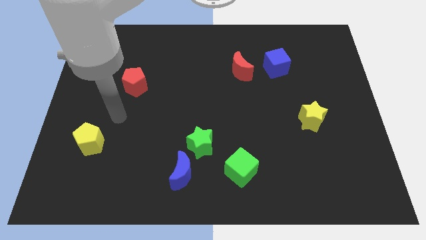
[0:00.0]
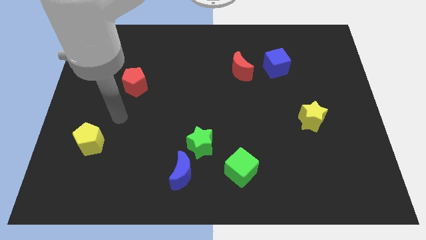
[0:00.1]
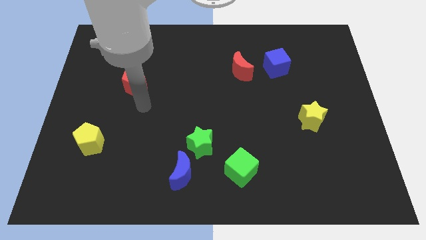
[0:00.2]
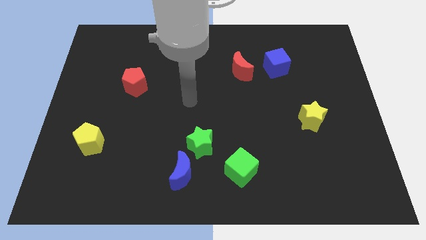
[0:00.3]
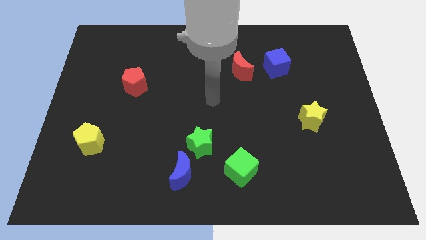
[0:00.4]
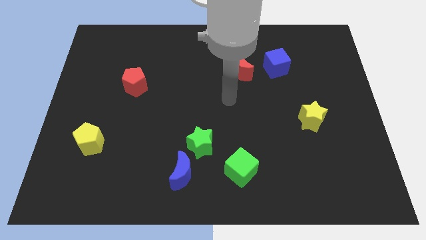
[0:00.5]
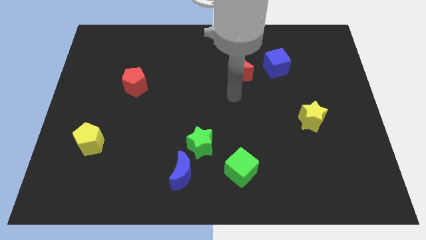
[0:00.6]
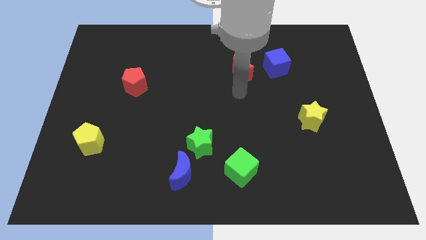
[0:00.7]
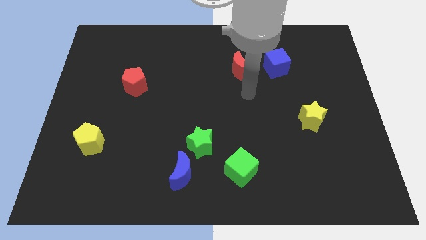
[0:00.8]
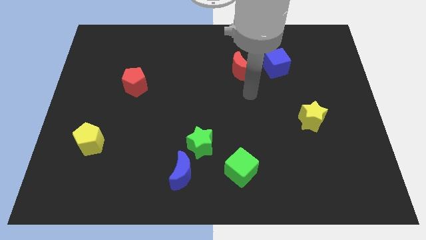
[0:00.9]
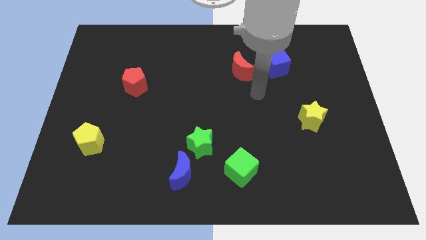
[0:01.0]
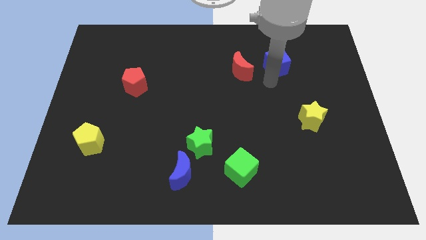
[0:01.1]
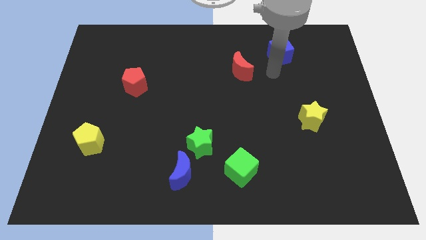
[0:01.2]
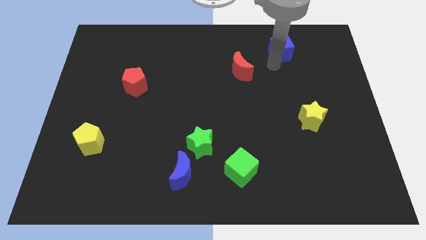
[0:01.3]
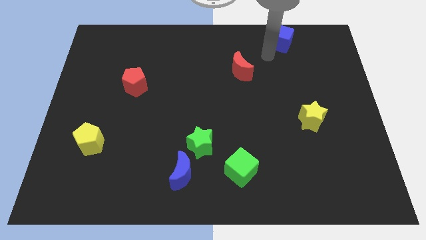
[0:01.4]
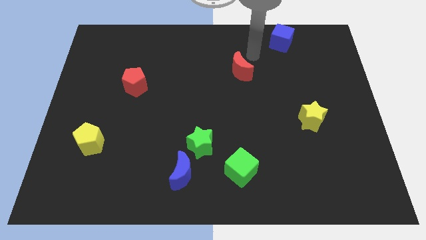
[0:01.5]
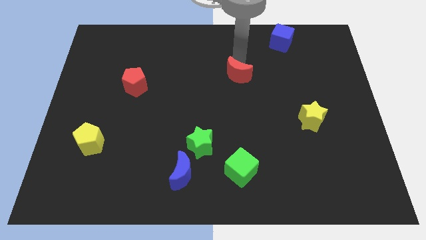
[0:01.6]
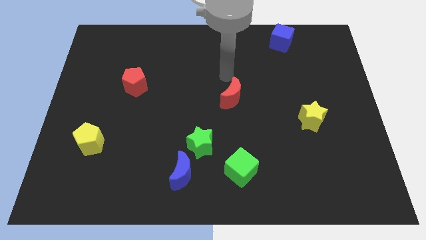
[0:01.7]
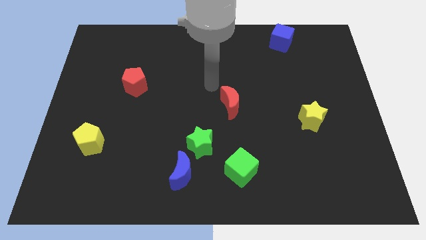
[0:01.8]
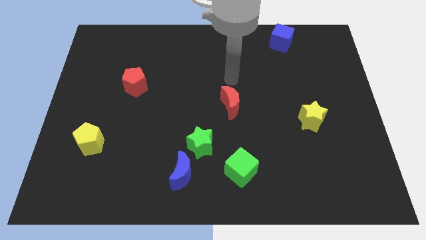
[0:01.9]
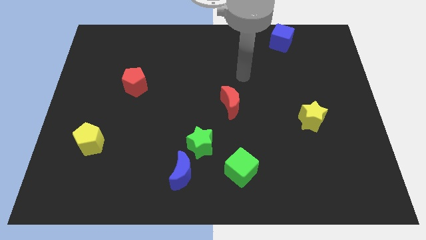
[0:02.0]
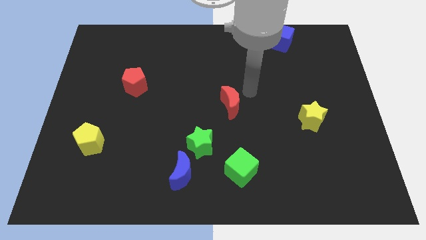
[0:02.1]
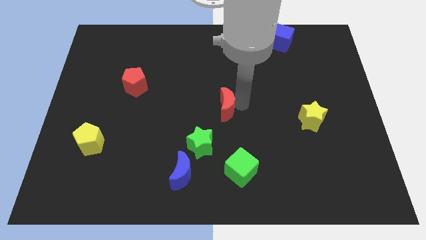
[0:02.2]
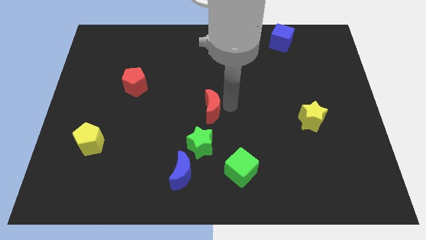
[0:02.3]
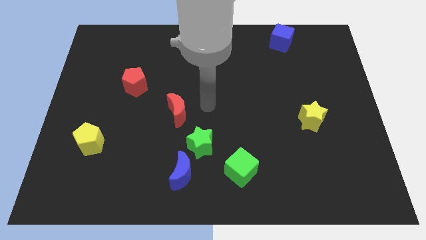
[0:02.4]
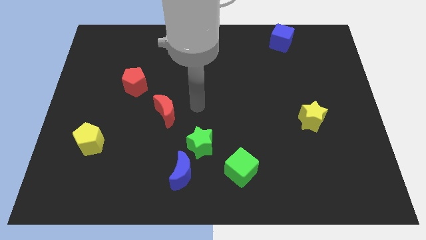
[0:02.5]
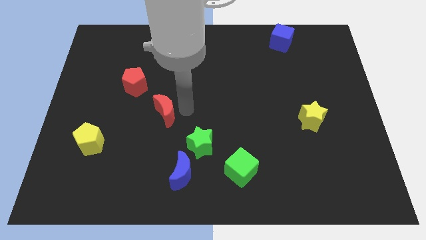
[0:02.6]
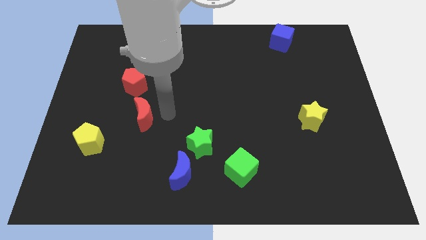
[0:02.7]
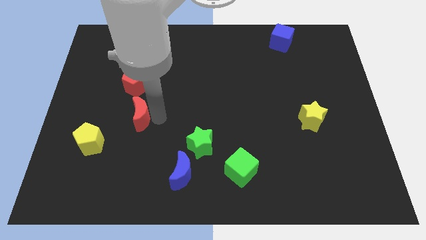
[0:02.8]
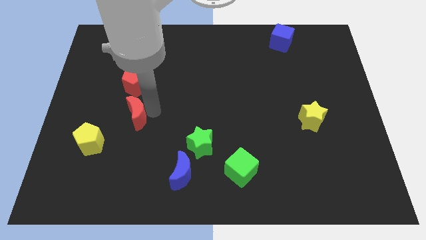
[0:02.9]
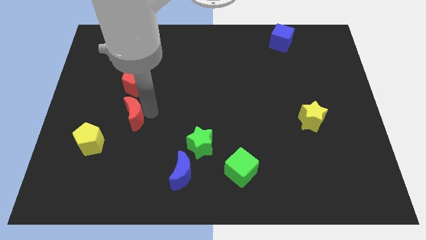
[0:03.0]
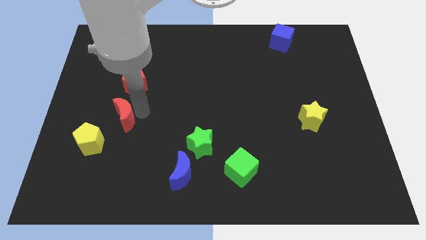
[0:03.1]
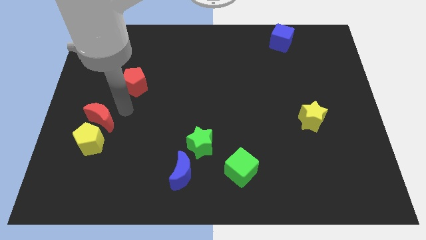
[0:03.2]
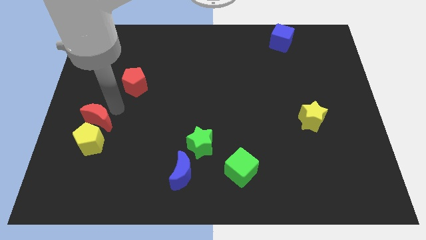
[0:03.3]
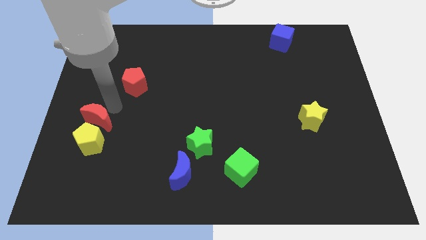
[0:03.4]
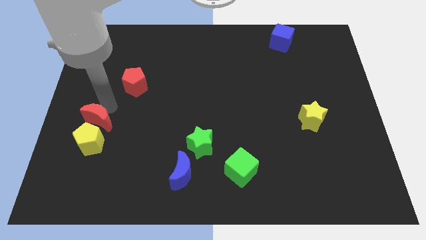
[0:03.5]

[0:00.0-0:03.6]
move the red moon next to the yellow pentagon

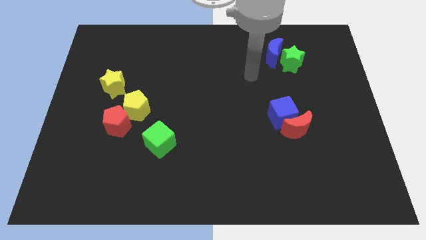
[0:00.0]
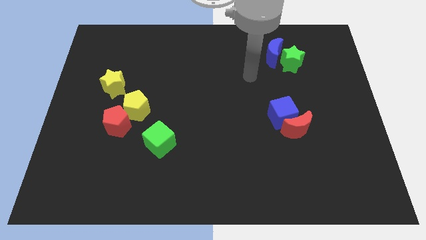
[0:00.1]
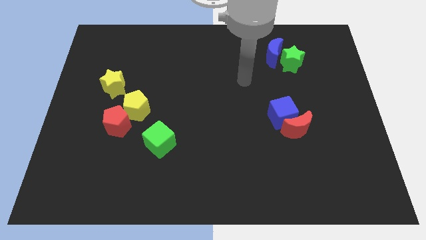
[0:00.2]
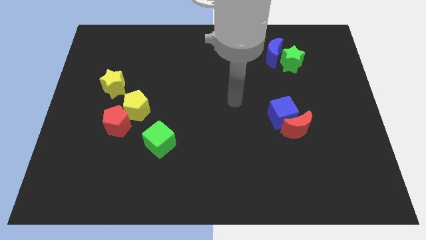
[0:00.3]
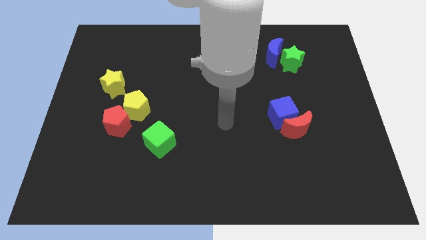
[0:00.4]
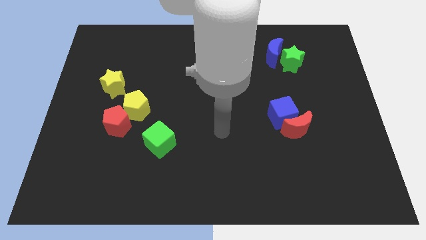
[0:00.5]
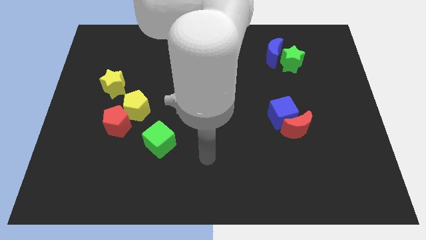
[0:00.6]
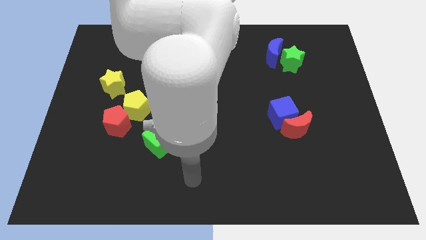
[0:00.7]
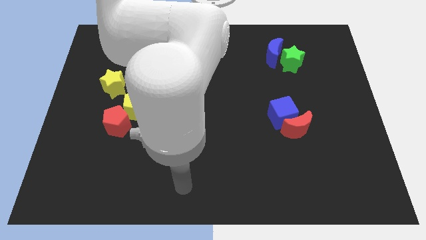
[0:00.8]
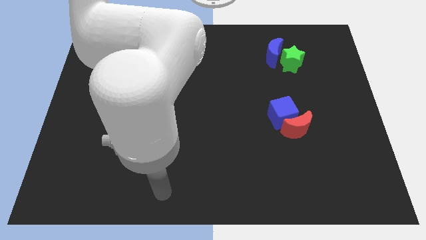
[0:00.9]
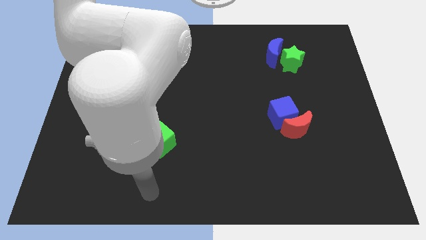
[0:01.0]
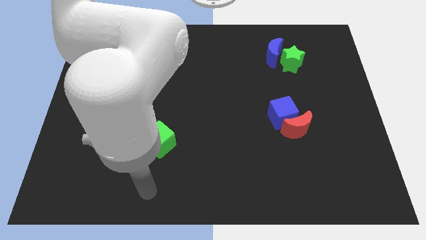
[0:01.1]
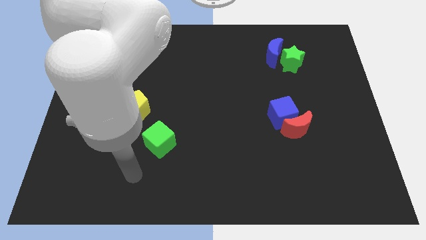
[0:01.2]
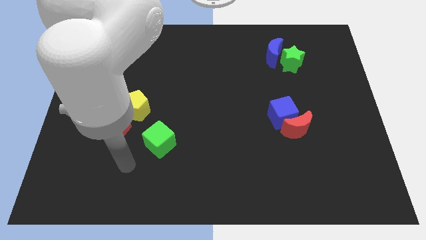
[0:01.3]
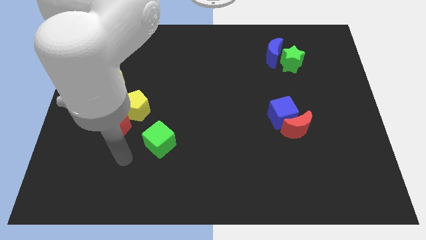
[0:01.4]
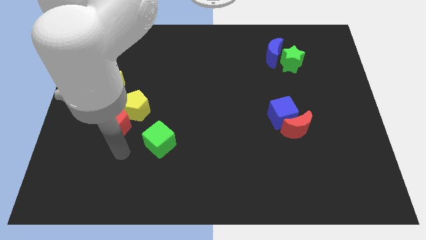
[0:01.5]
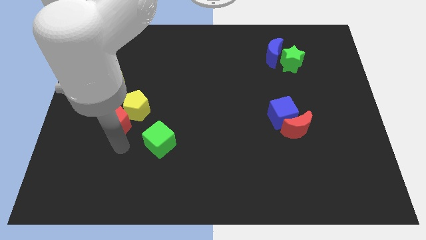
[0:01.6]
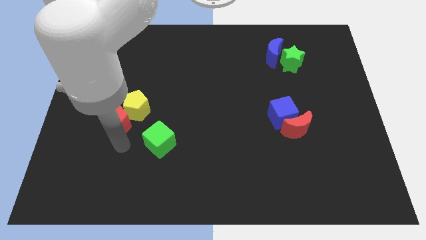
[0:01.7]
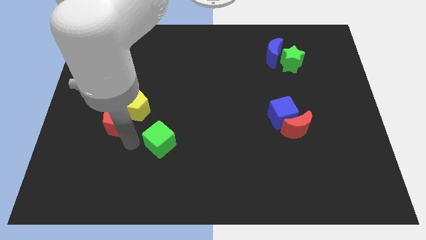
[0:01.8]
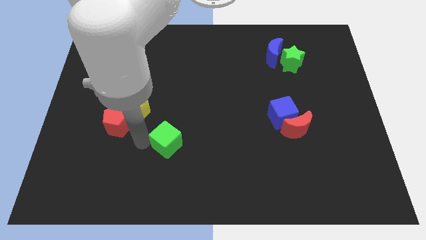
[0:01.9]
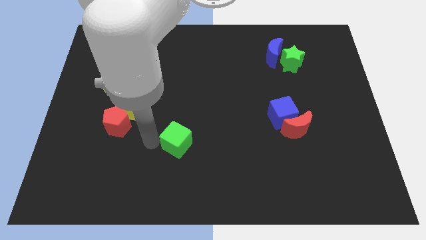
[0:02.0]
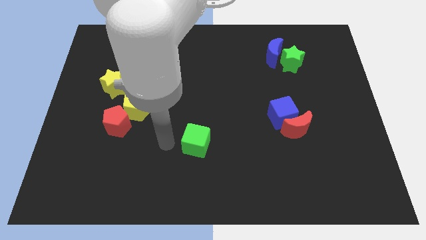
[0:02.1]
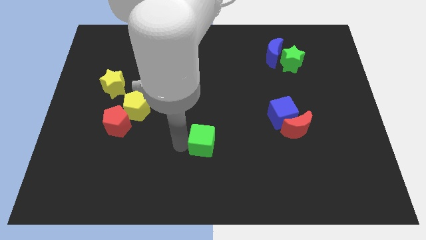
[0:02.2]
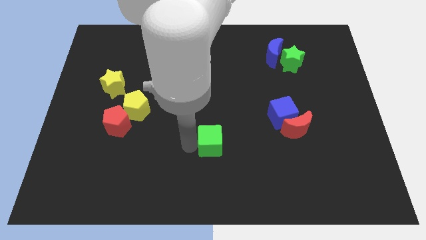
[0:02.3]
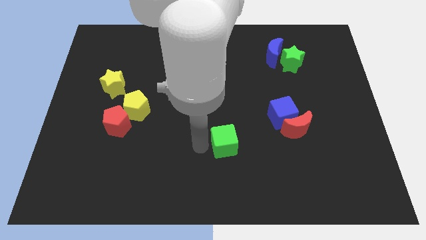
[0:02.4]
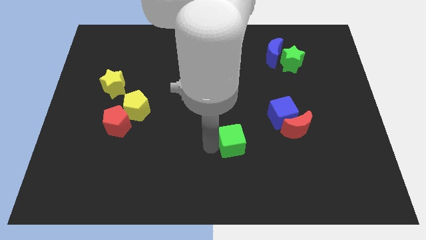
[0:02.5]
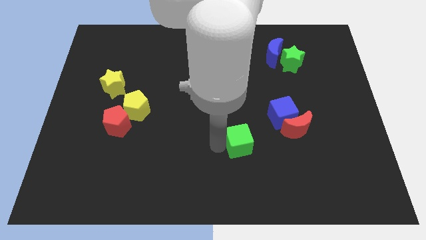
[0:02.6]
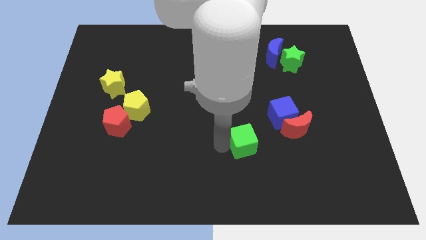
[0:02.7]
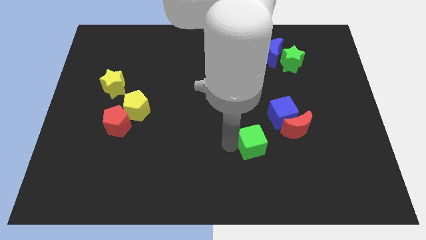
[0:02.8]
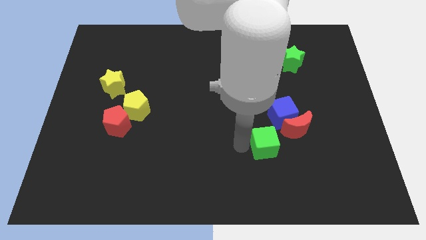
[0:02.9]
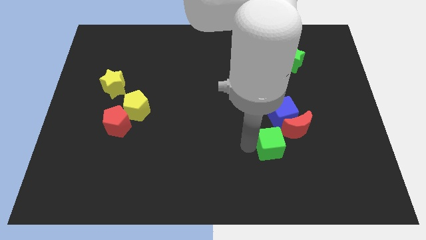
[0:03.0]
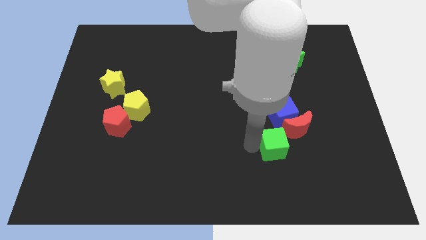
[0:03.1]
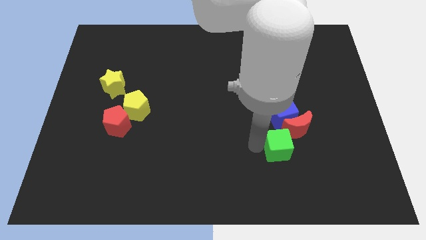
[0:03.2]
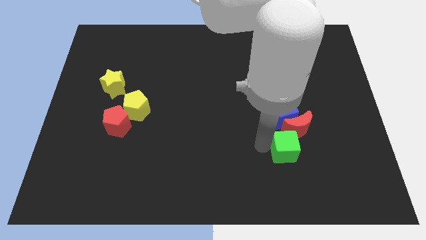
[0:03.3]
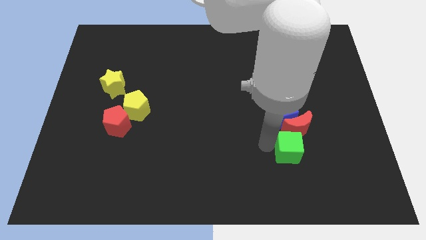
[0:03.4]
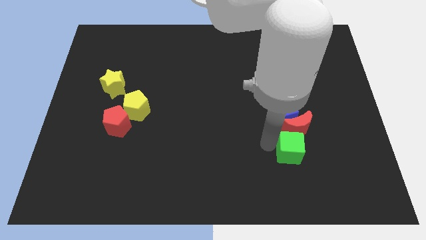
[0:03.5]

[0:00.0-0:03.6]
move the green cube next to the red moon

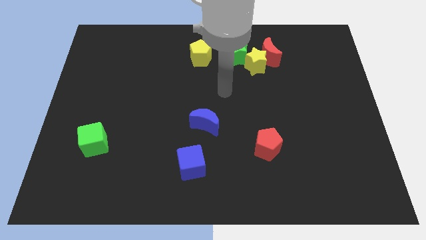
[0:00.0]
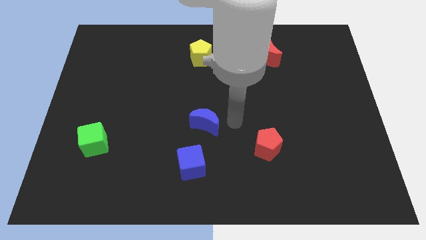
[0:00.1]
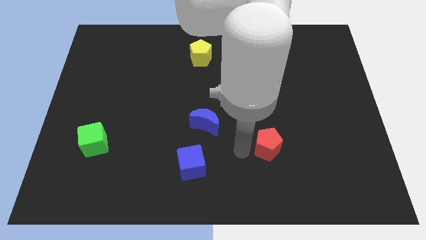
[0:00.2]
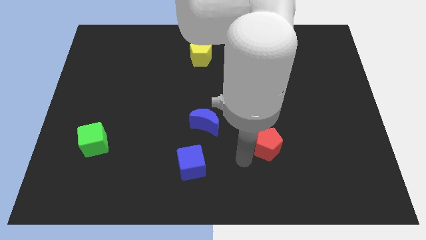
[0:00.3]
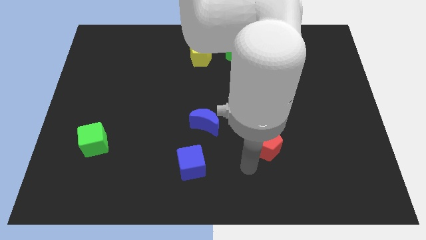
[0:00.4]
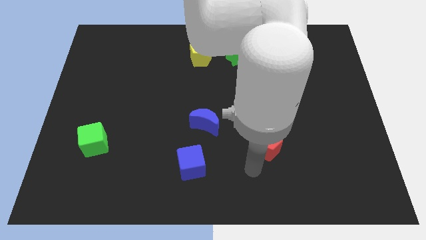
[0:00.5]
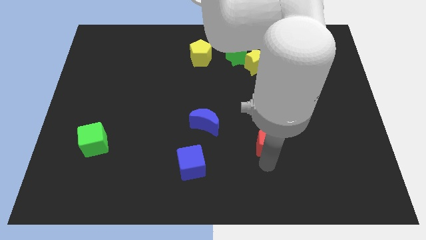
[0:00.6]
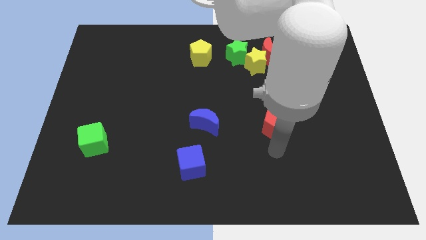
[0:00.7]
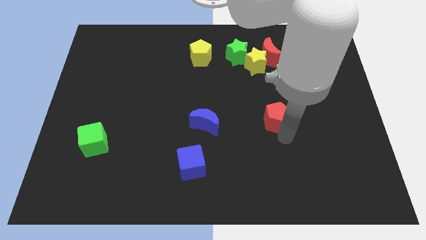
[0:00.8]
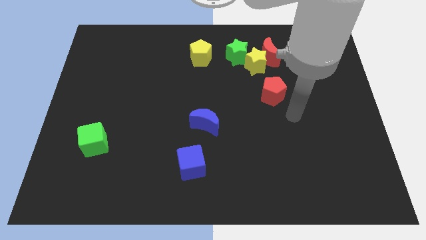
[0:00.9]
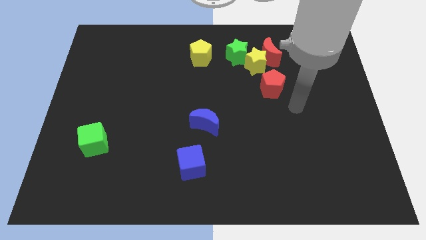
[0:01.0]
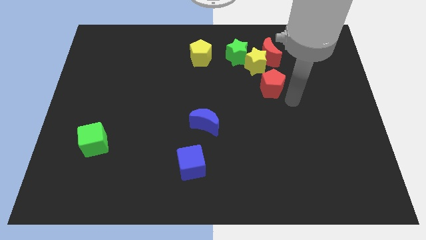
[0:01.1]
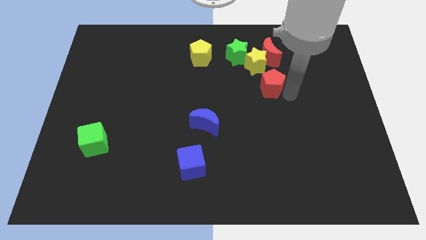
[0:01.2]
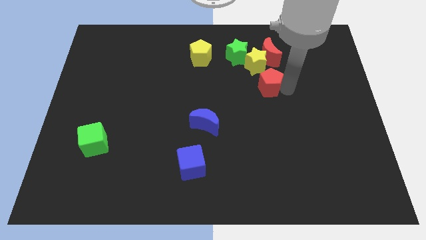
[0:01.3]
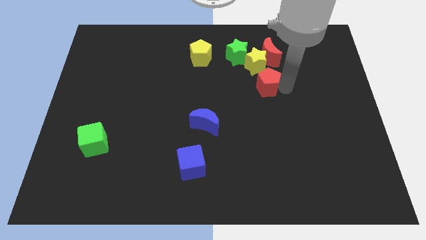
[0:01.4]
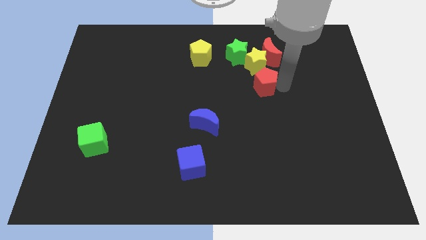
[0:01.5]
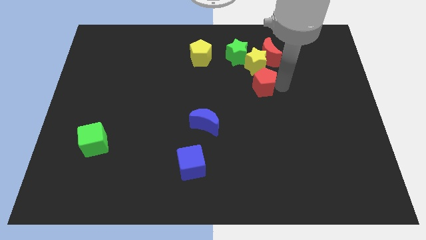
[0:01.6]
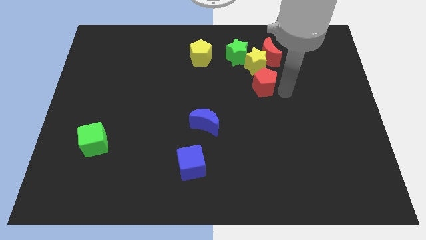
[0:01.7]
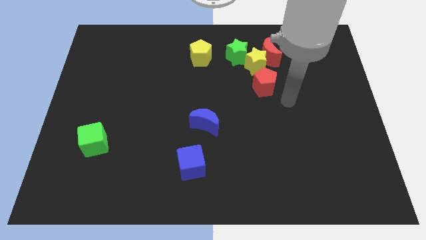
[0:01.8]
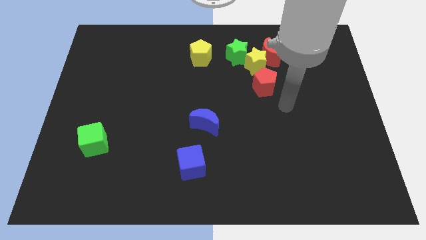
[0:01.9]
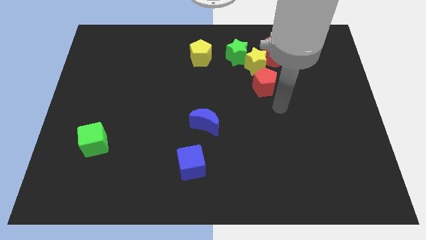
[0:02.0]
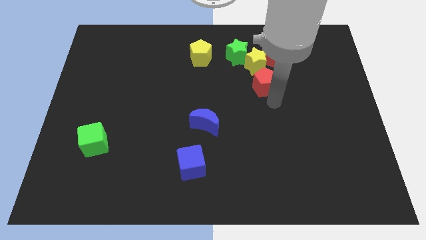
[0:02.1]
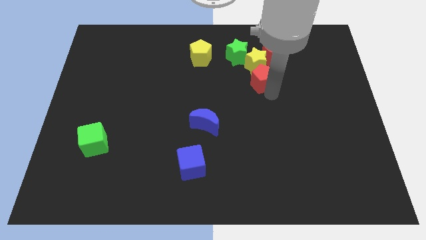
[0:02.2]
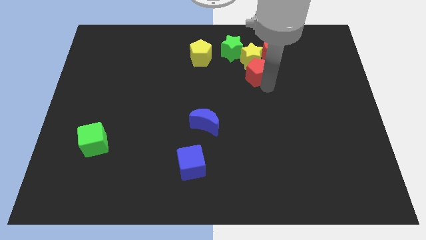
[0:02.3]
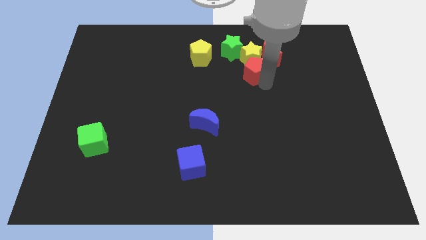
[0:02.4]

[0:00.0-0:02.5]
push the red pentagon to the yellow star
